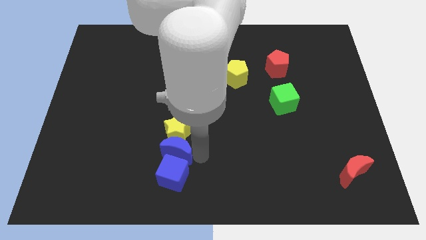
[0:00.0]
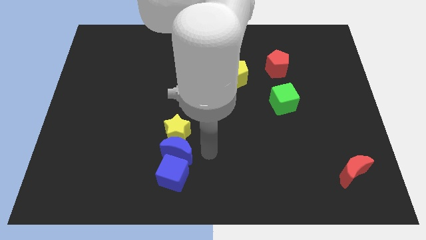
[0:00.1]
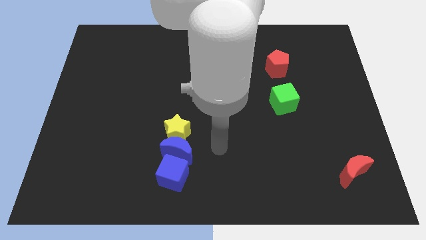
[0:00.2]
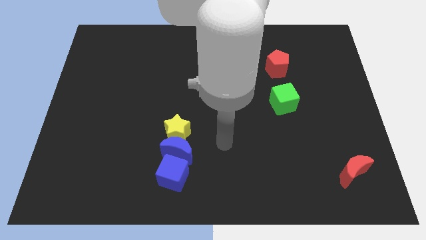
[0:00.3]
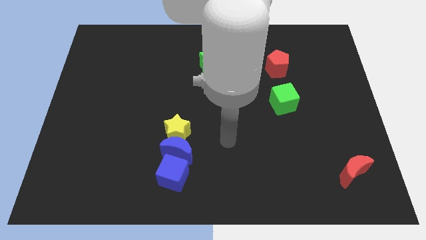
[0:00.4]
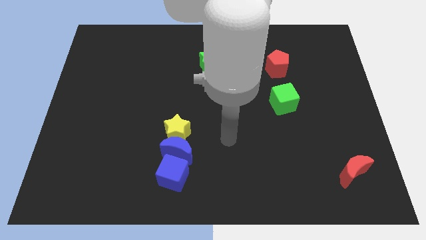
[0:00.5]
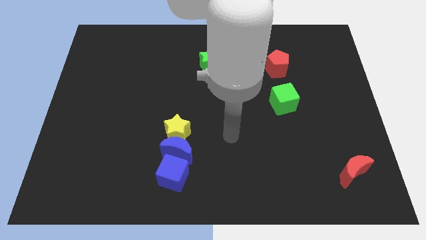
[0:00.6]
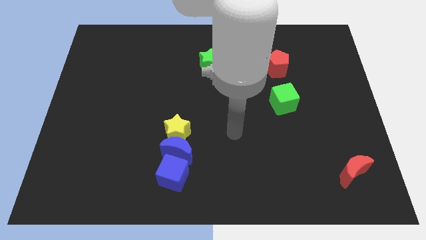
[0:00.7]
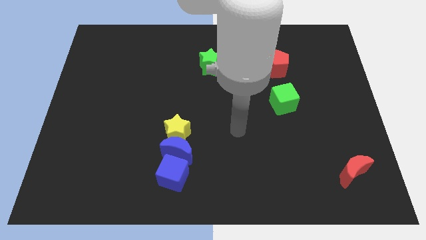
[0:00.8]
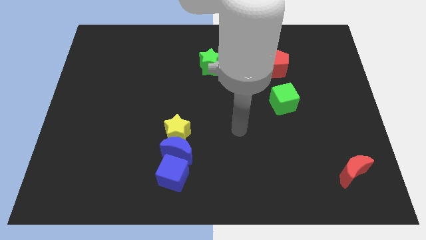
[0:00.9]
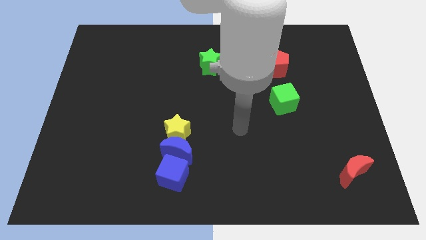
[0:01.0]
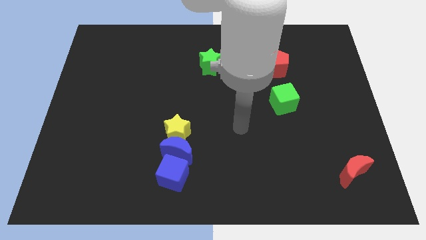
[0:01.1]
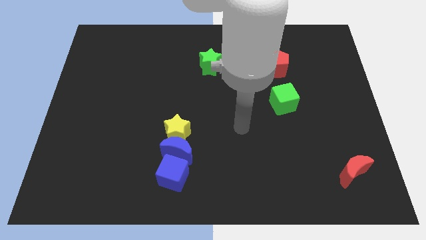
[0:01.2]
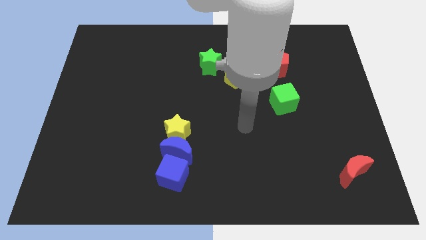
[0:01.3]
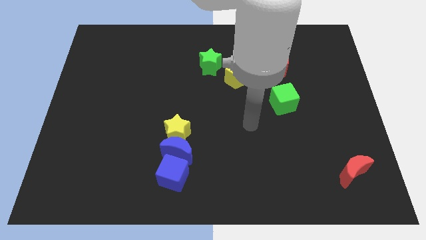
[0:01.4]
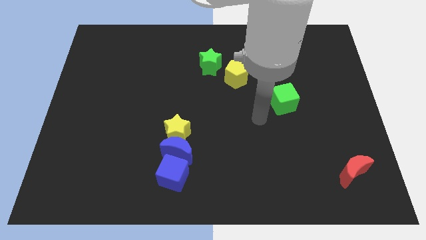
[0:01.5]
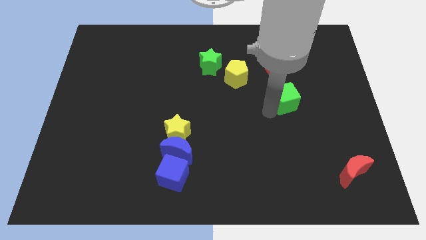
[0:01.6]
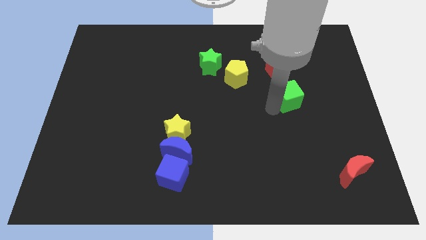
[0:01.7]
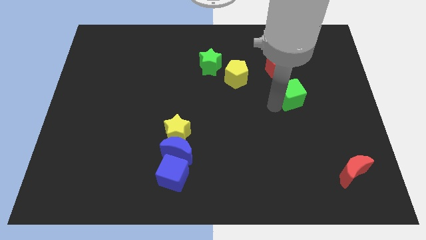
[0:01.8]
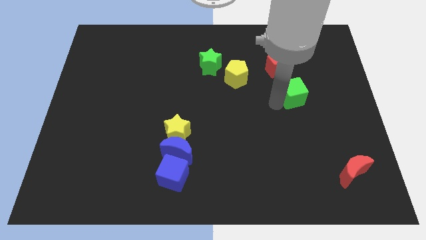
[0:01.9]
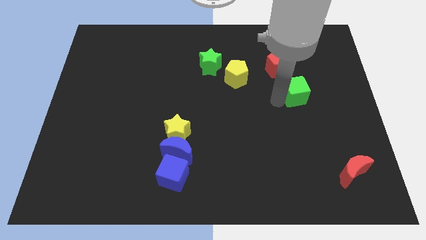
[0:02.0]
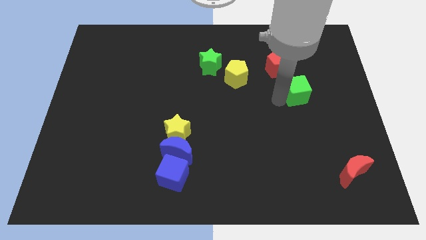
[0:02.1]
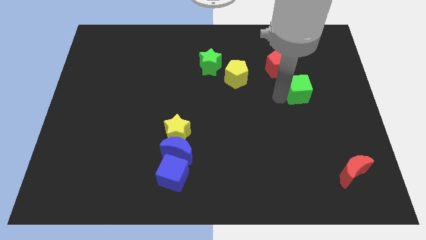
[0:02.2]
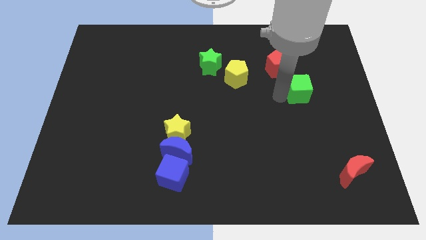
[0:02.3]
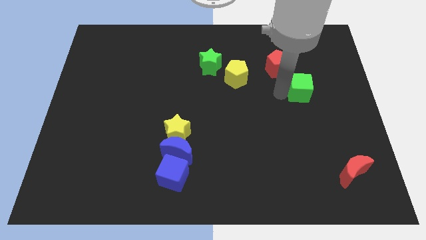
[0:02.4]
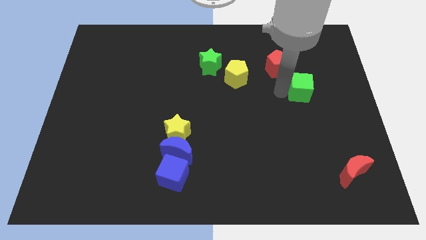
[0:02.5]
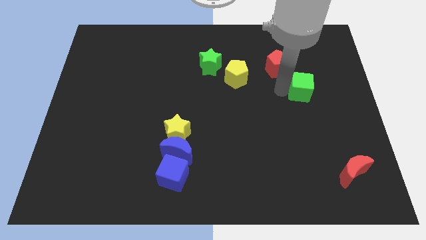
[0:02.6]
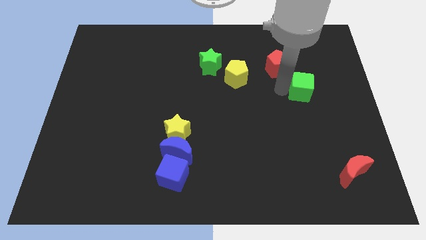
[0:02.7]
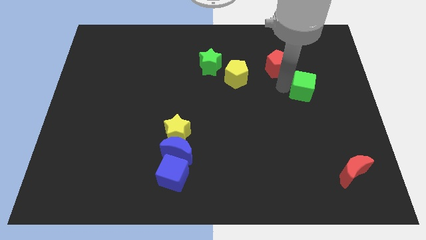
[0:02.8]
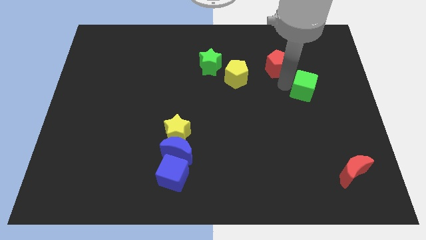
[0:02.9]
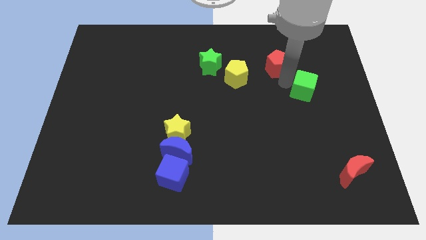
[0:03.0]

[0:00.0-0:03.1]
move the green cube to the bottom right of the red pentagon

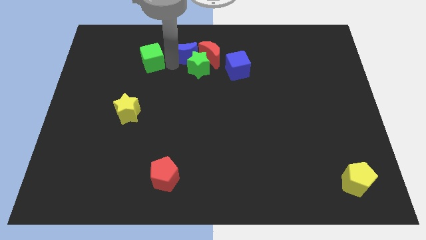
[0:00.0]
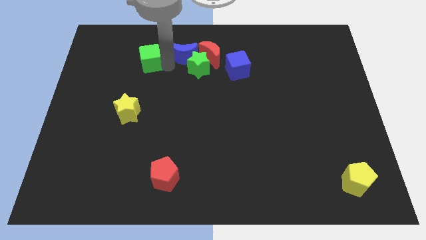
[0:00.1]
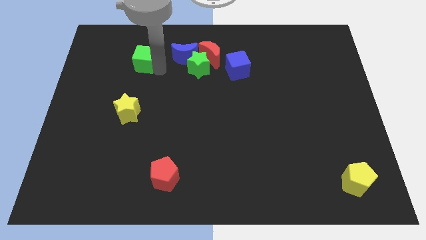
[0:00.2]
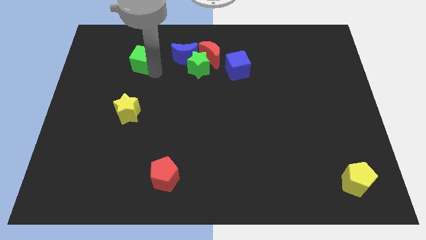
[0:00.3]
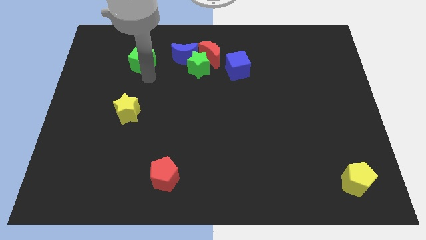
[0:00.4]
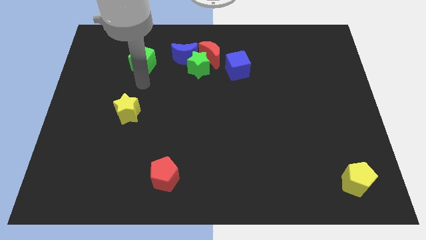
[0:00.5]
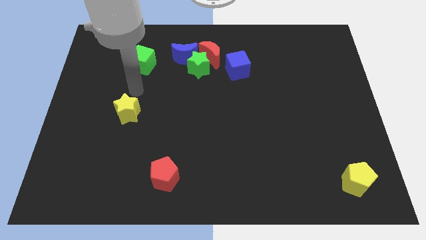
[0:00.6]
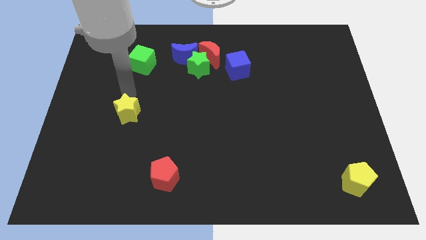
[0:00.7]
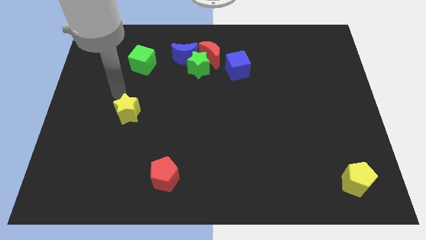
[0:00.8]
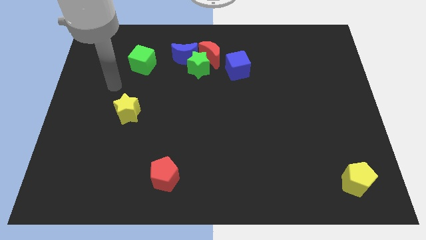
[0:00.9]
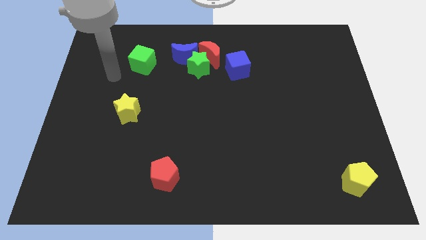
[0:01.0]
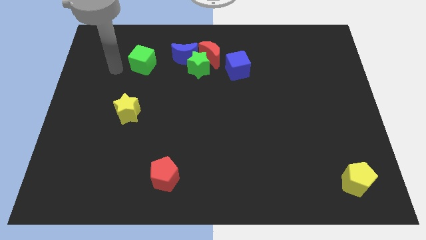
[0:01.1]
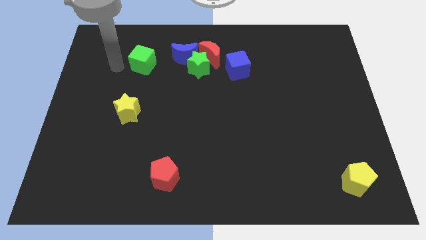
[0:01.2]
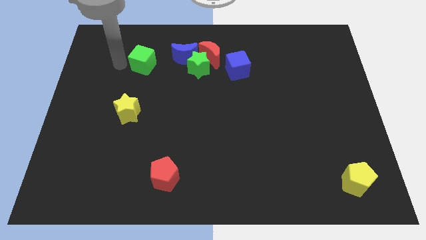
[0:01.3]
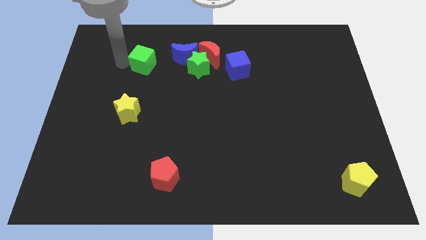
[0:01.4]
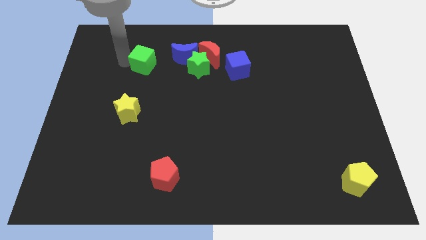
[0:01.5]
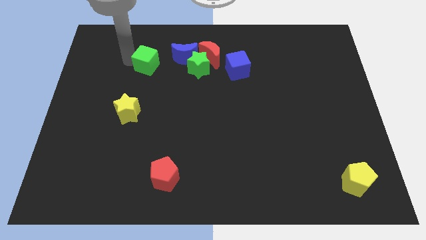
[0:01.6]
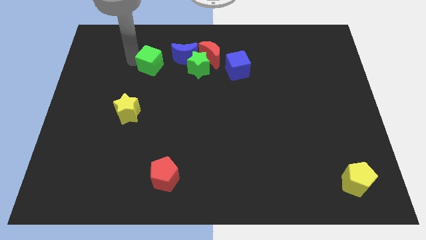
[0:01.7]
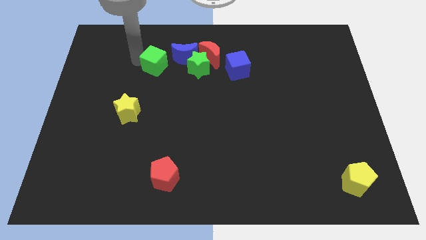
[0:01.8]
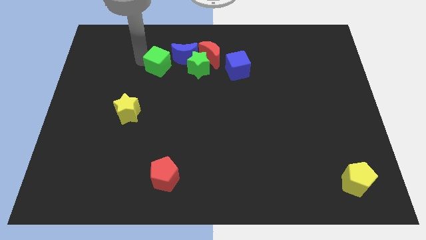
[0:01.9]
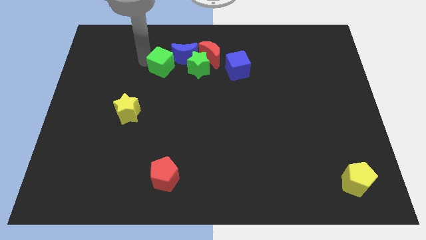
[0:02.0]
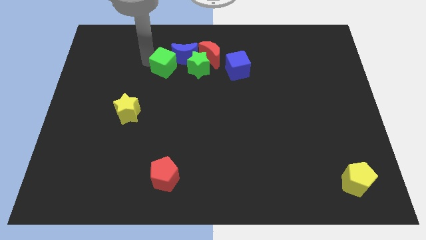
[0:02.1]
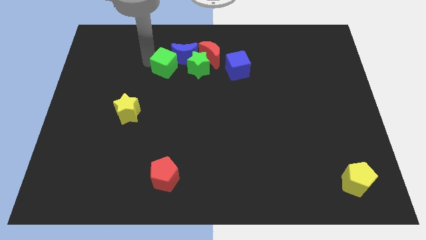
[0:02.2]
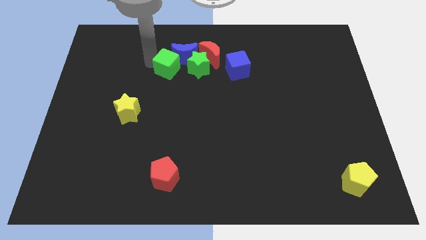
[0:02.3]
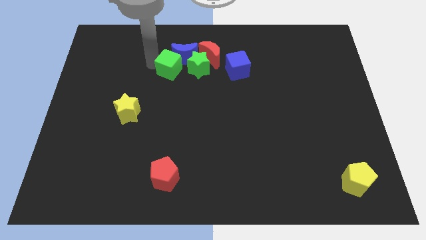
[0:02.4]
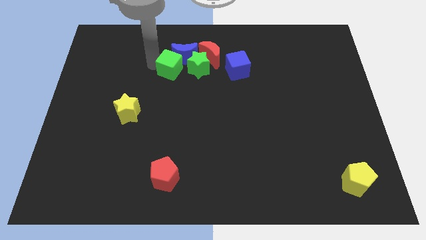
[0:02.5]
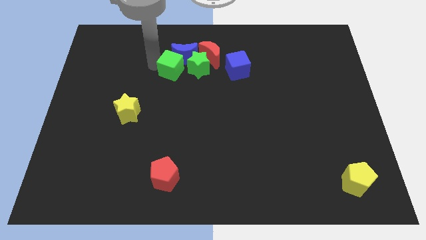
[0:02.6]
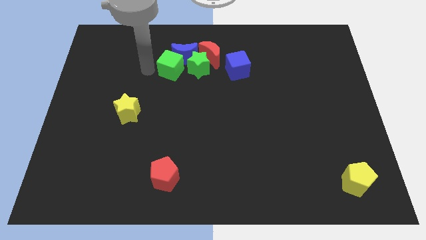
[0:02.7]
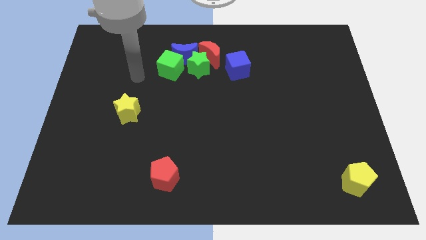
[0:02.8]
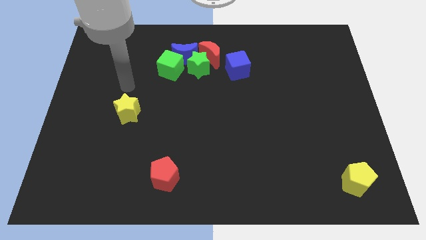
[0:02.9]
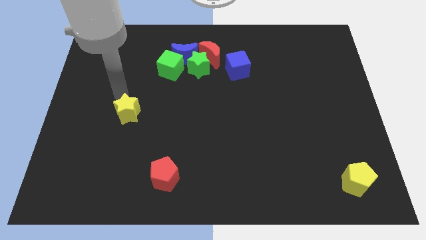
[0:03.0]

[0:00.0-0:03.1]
place the green cube parallel to green star

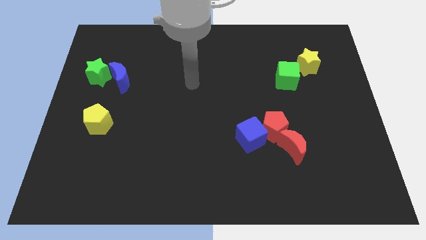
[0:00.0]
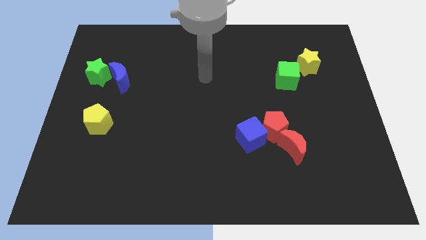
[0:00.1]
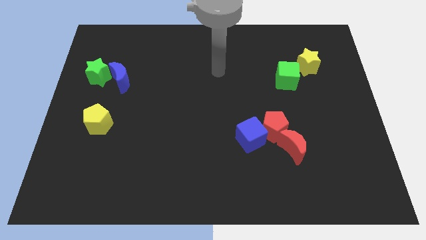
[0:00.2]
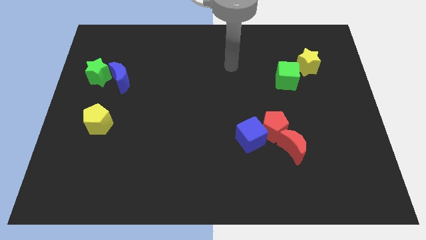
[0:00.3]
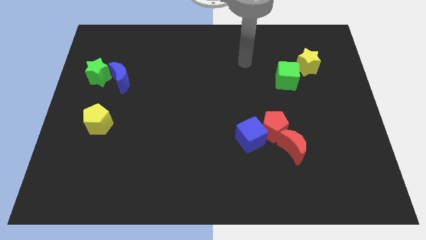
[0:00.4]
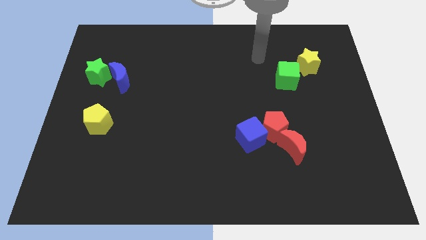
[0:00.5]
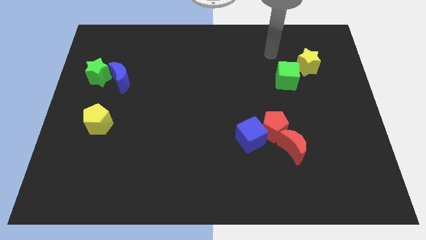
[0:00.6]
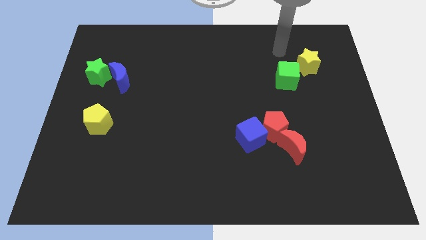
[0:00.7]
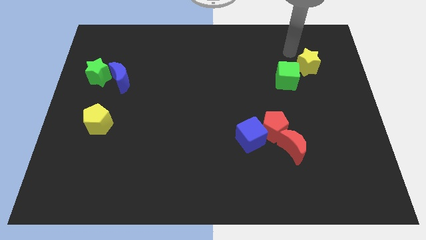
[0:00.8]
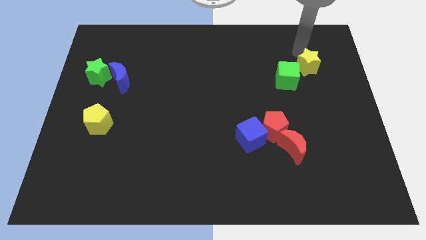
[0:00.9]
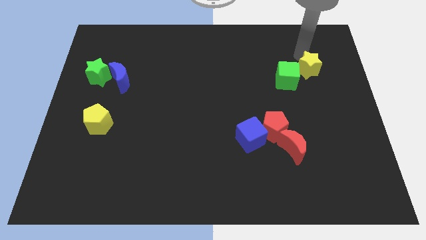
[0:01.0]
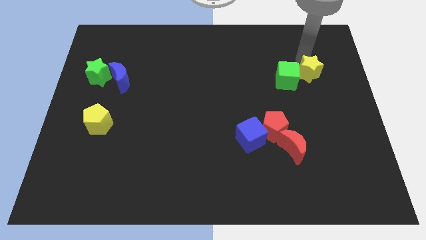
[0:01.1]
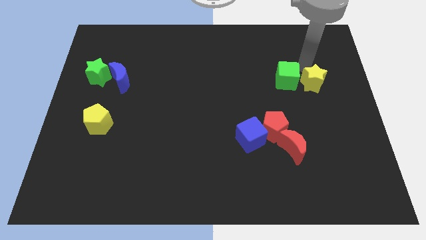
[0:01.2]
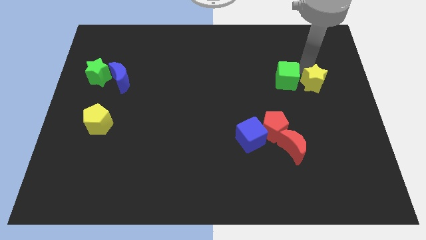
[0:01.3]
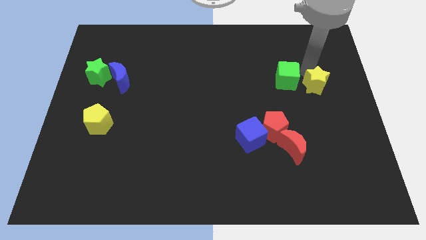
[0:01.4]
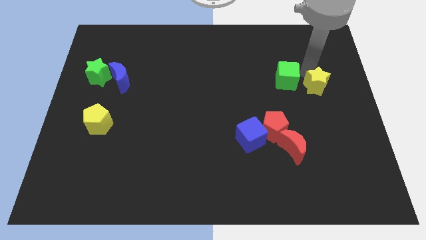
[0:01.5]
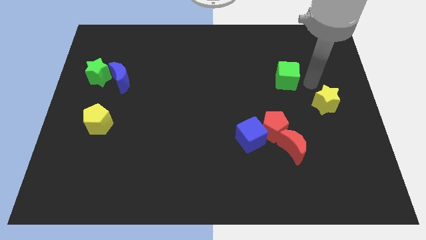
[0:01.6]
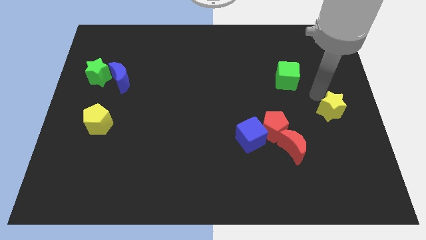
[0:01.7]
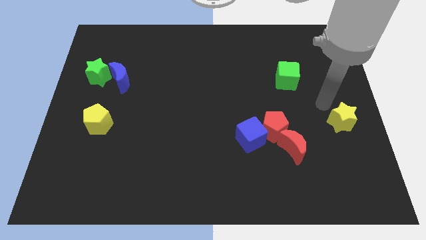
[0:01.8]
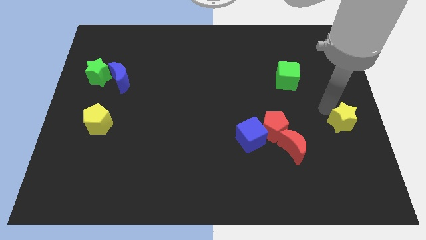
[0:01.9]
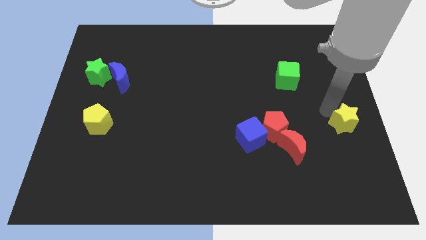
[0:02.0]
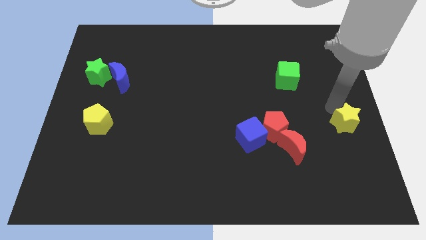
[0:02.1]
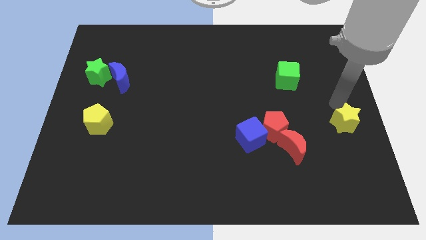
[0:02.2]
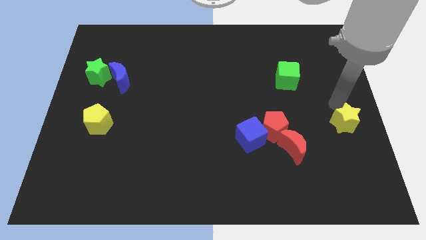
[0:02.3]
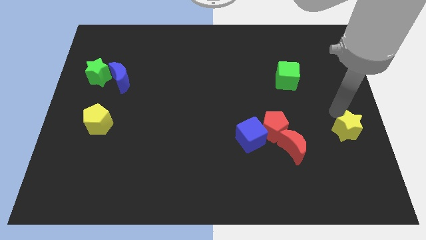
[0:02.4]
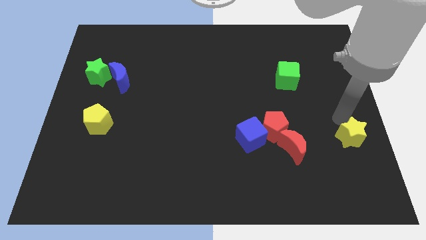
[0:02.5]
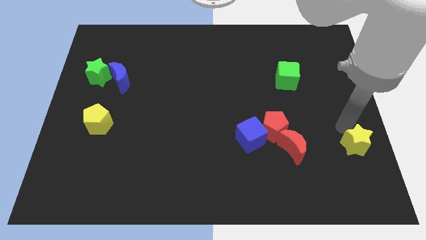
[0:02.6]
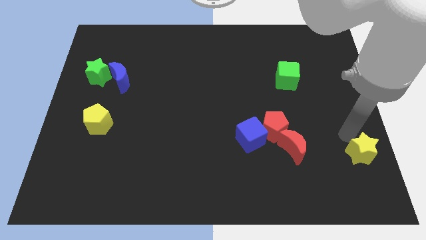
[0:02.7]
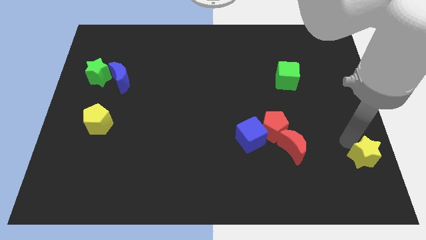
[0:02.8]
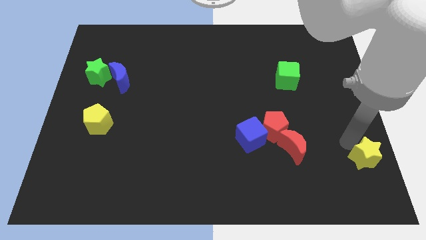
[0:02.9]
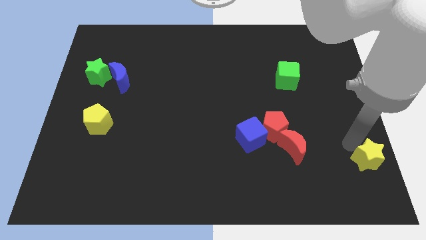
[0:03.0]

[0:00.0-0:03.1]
separate yellow star from the green cube
